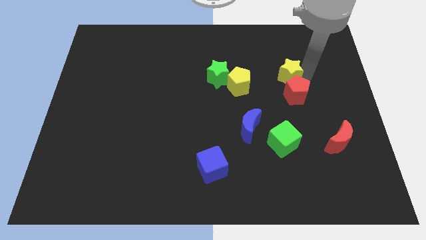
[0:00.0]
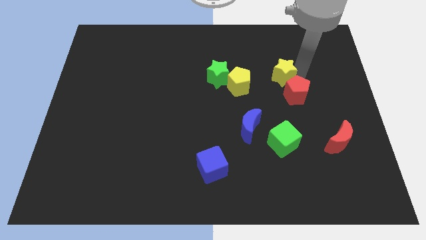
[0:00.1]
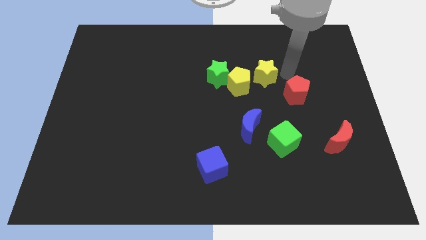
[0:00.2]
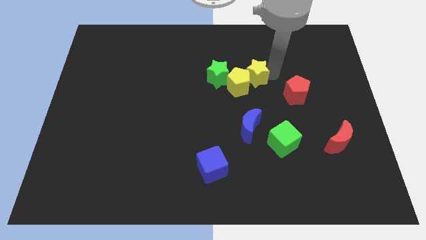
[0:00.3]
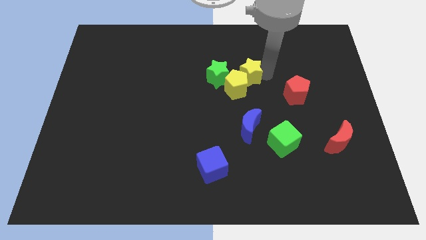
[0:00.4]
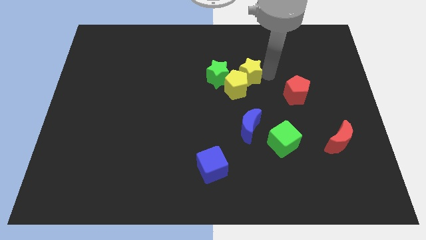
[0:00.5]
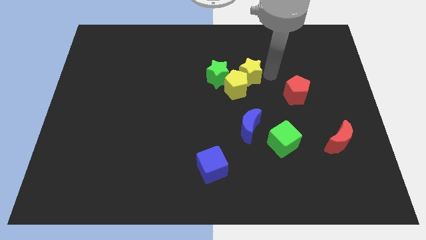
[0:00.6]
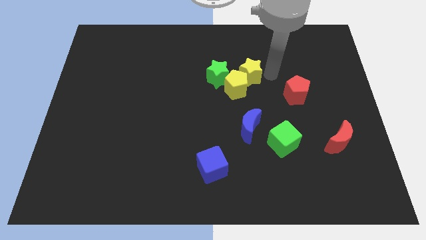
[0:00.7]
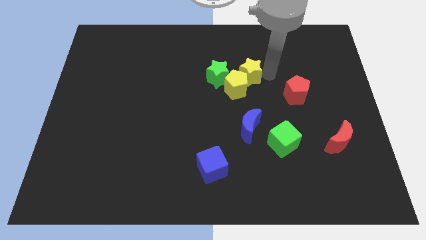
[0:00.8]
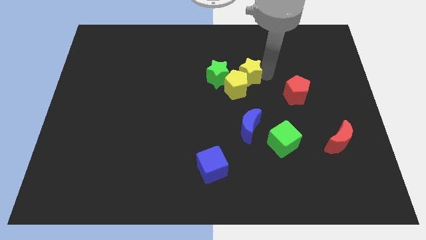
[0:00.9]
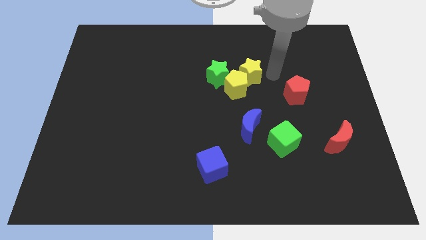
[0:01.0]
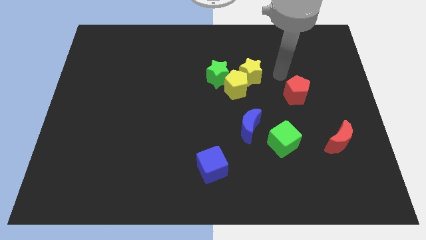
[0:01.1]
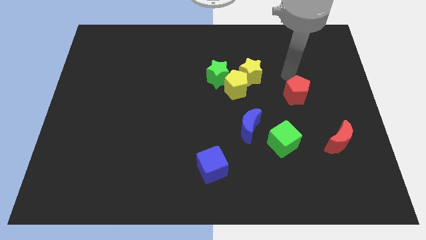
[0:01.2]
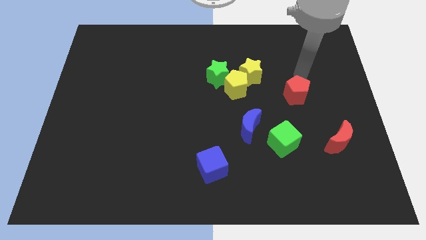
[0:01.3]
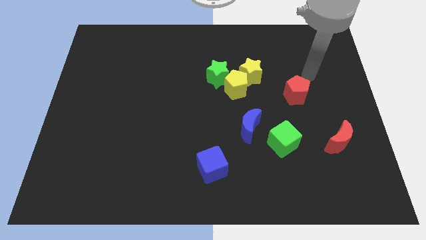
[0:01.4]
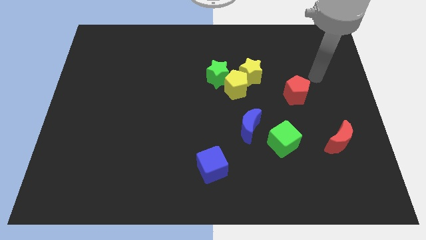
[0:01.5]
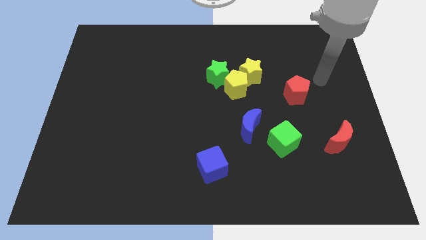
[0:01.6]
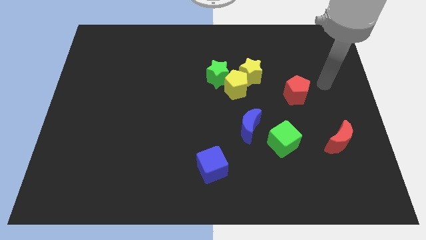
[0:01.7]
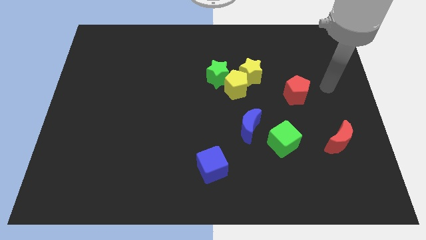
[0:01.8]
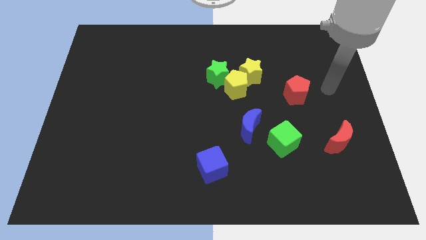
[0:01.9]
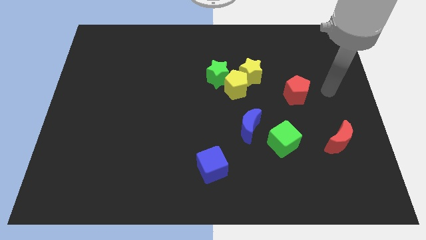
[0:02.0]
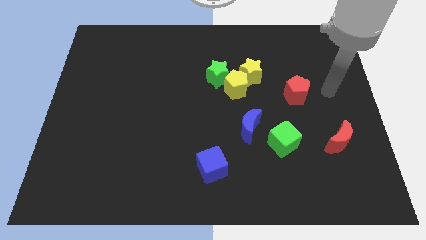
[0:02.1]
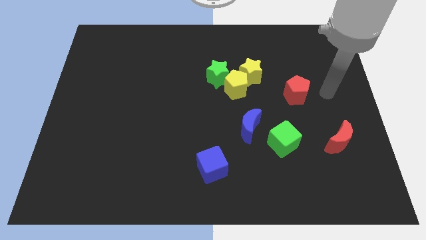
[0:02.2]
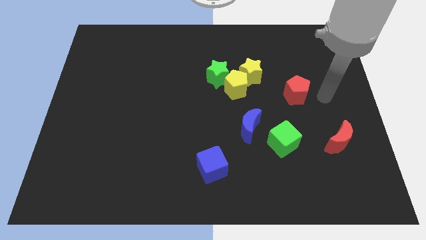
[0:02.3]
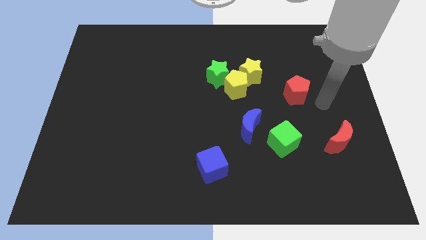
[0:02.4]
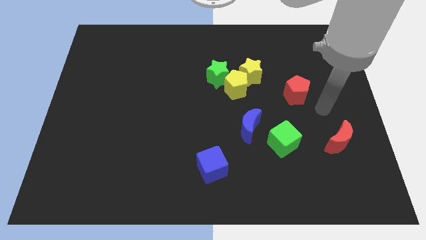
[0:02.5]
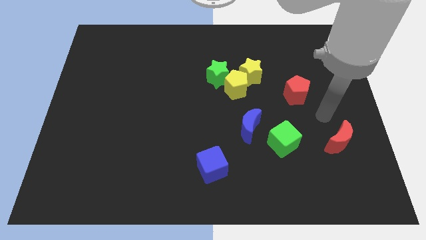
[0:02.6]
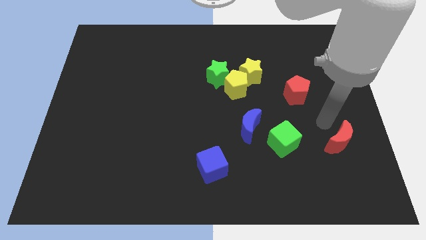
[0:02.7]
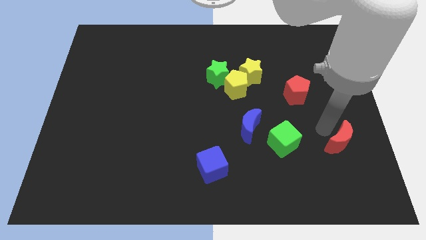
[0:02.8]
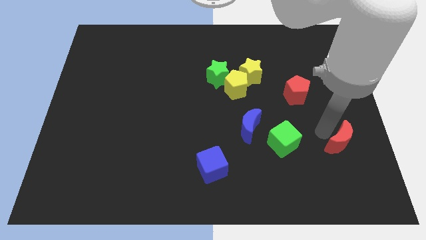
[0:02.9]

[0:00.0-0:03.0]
separate yellow star from red pentagon

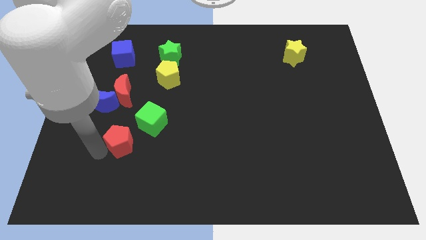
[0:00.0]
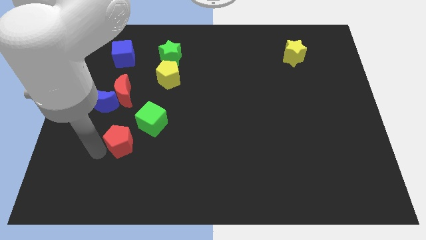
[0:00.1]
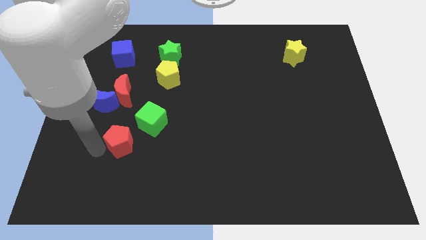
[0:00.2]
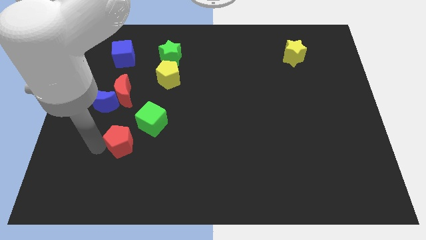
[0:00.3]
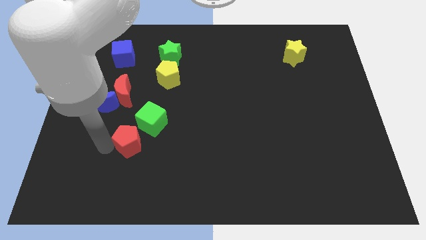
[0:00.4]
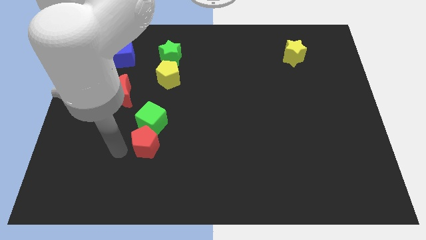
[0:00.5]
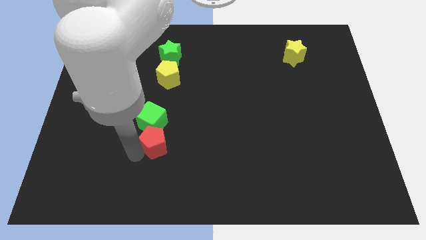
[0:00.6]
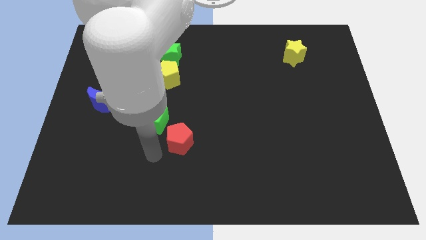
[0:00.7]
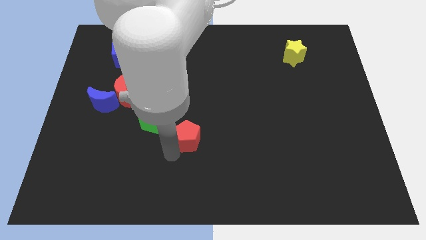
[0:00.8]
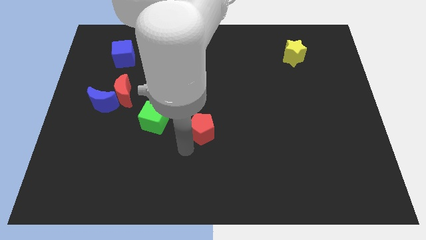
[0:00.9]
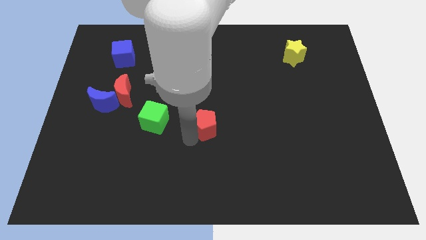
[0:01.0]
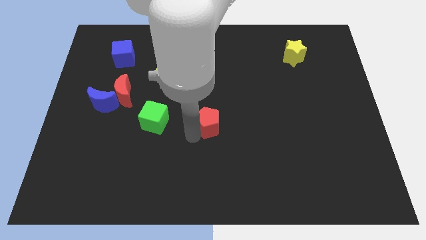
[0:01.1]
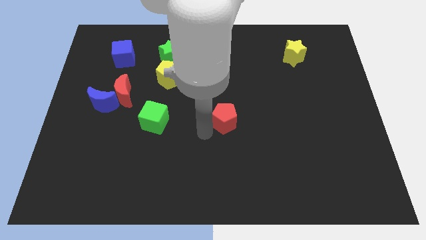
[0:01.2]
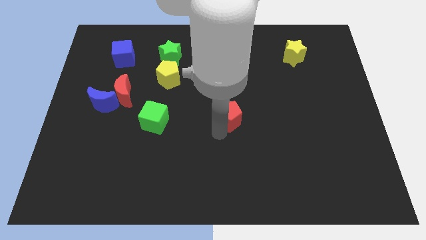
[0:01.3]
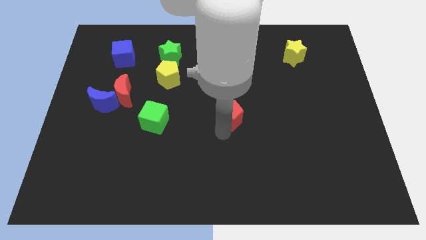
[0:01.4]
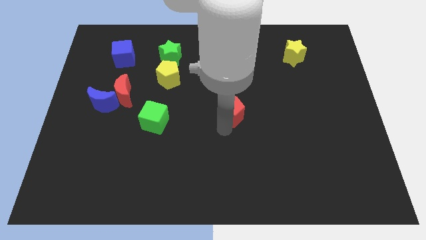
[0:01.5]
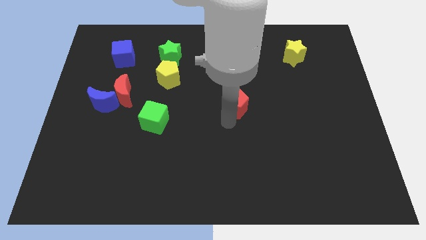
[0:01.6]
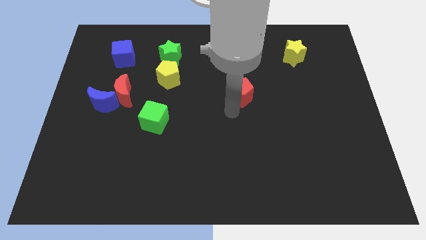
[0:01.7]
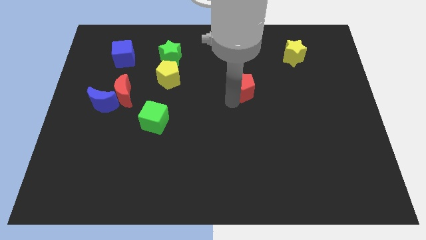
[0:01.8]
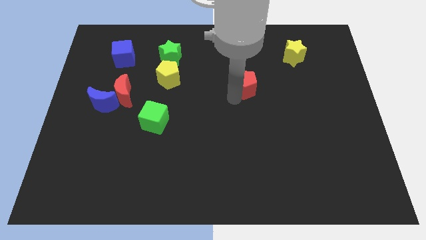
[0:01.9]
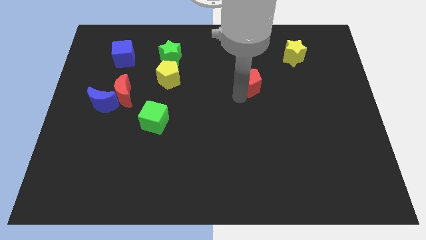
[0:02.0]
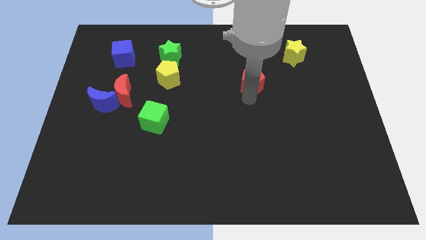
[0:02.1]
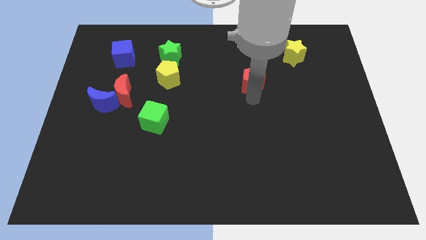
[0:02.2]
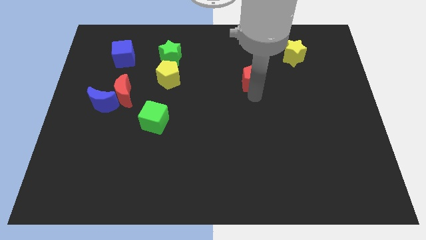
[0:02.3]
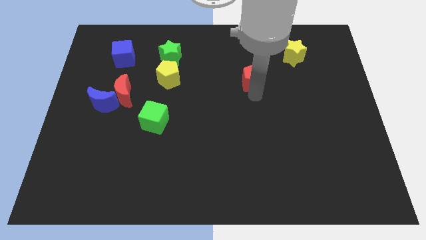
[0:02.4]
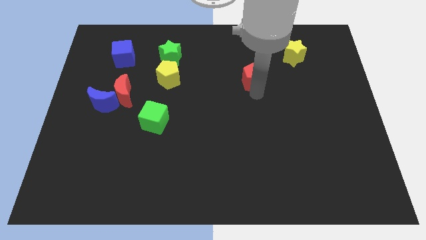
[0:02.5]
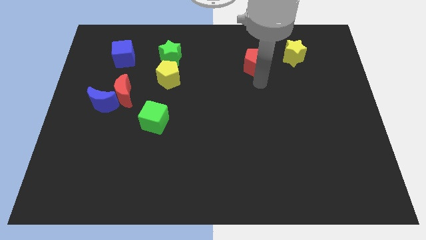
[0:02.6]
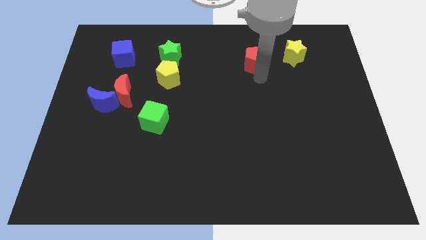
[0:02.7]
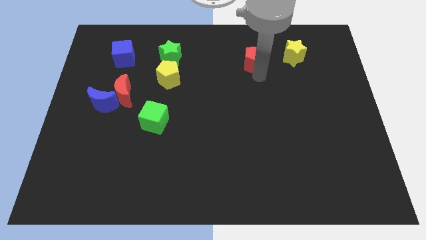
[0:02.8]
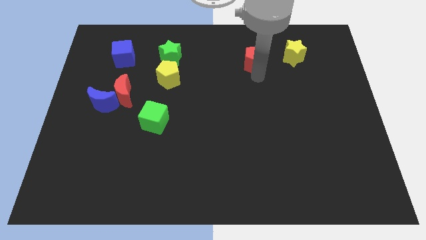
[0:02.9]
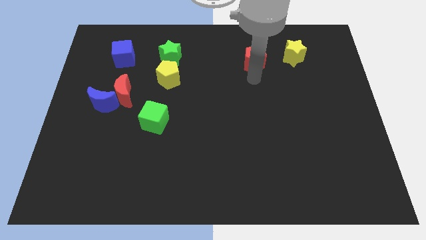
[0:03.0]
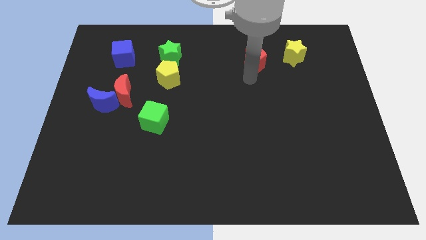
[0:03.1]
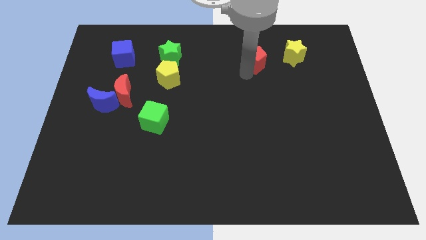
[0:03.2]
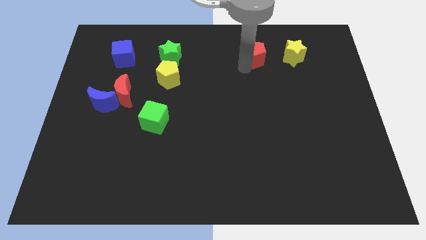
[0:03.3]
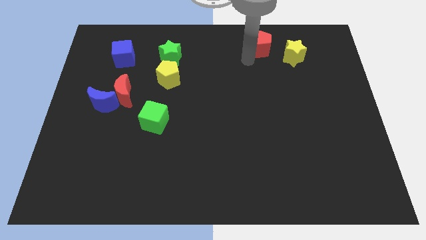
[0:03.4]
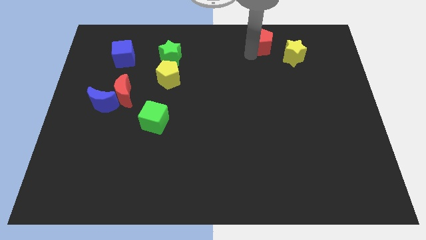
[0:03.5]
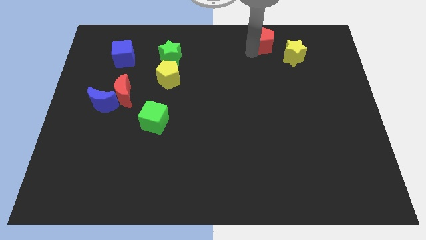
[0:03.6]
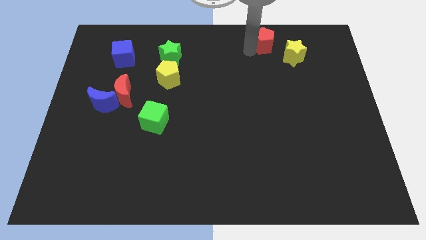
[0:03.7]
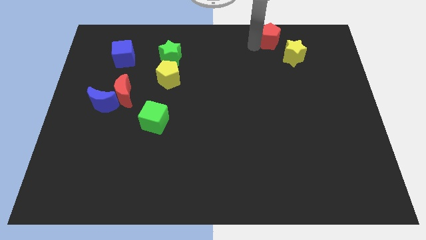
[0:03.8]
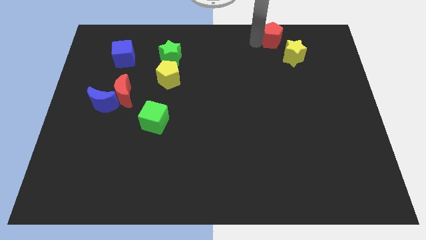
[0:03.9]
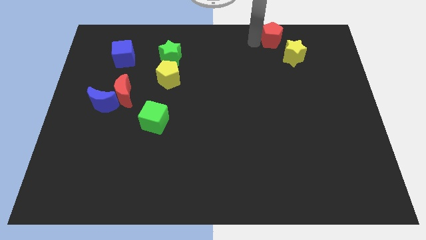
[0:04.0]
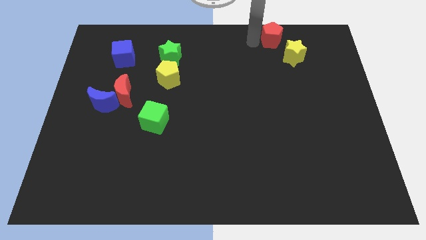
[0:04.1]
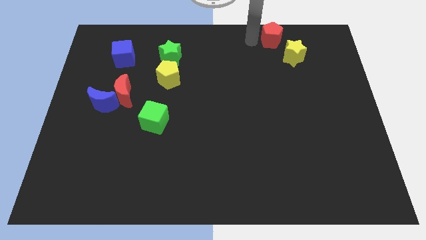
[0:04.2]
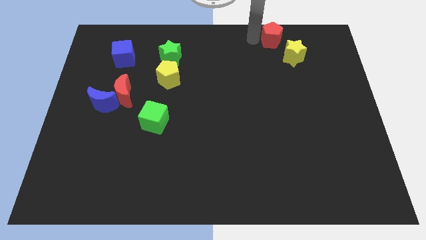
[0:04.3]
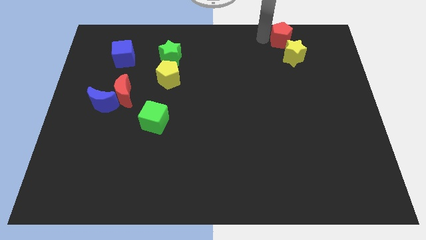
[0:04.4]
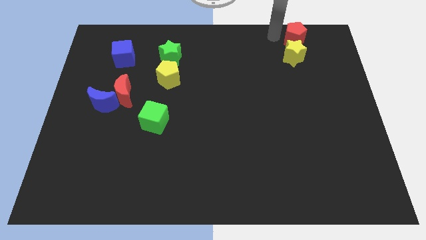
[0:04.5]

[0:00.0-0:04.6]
put the red pentagon above the yellow star

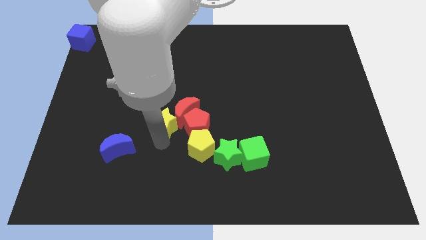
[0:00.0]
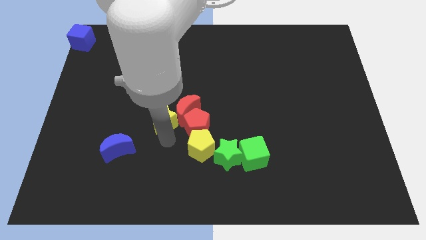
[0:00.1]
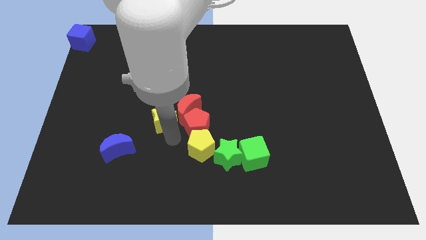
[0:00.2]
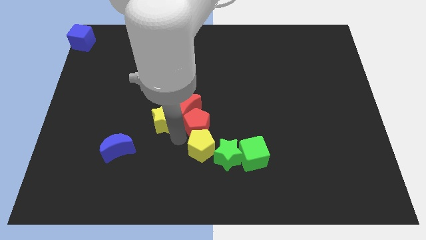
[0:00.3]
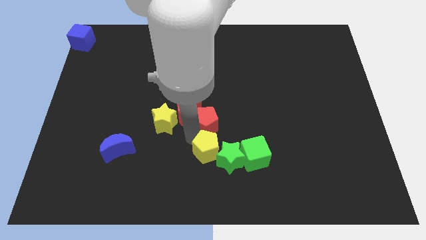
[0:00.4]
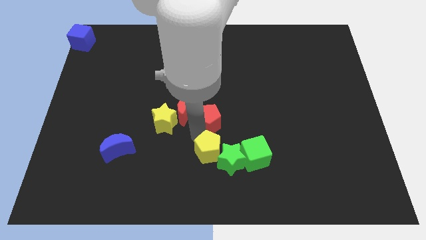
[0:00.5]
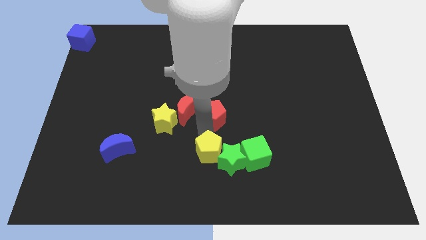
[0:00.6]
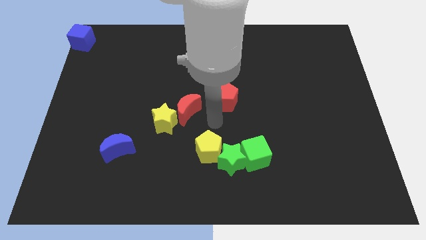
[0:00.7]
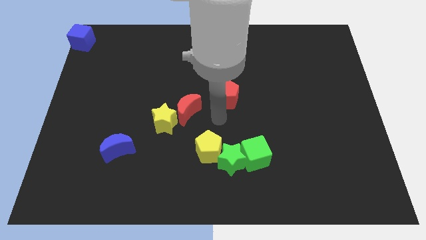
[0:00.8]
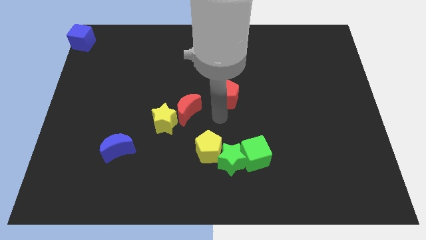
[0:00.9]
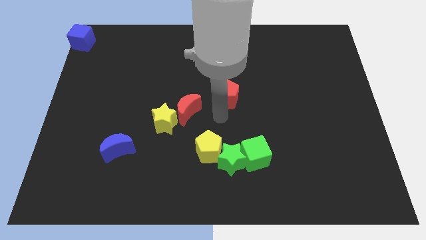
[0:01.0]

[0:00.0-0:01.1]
move the red pentagon to the center of the board

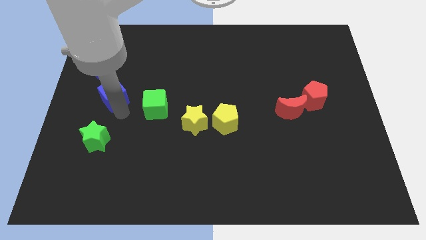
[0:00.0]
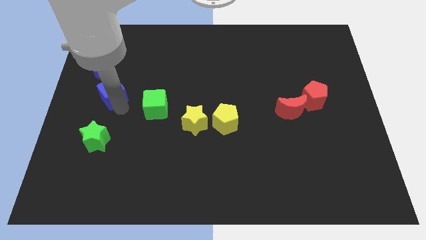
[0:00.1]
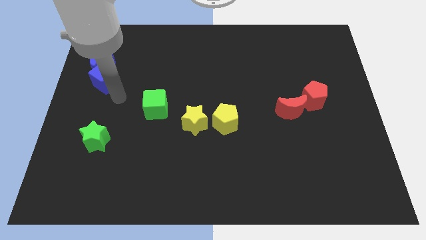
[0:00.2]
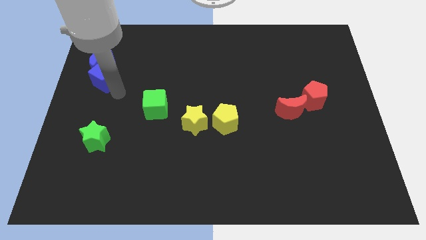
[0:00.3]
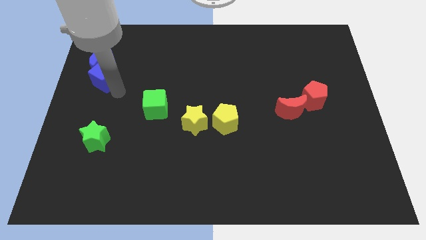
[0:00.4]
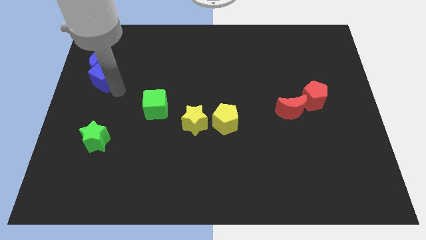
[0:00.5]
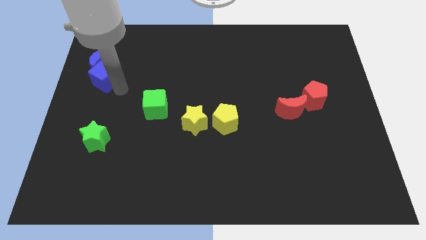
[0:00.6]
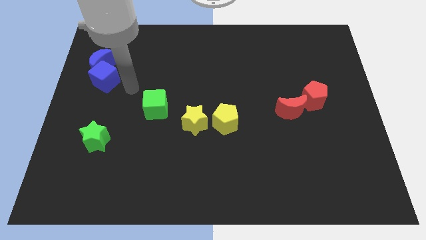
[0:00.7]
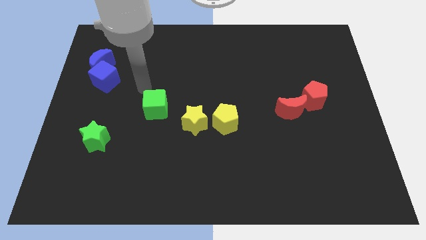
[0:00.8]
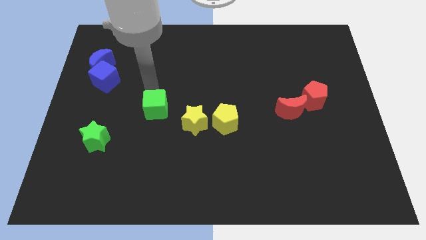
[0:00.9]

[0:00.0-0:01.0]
place your arm above green cube
